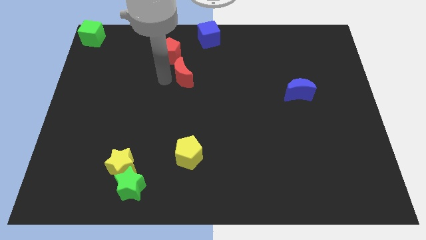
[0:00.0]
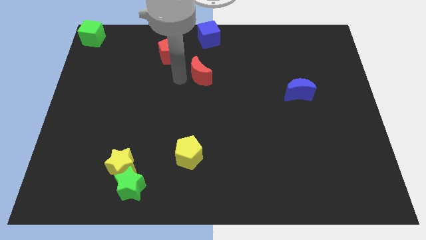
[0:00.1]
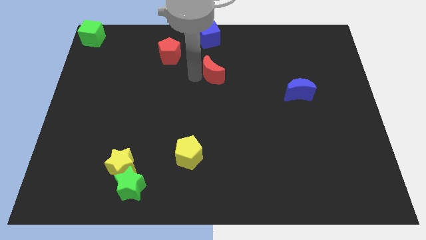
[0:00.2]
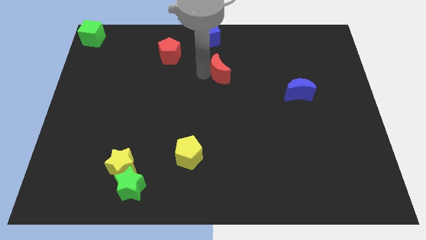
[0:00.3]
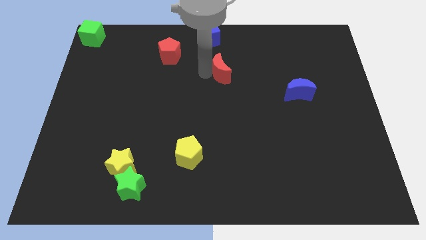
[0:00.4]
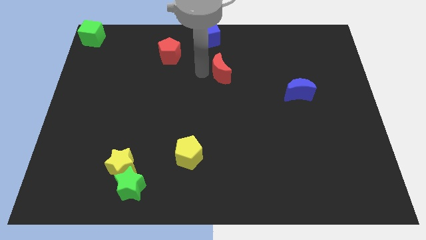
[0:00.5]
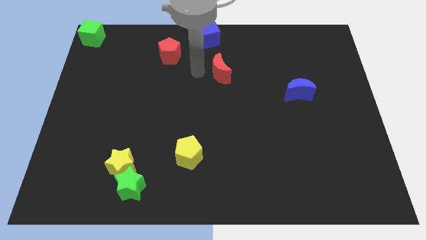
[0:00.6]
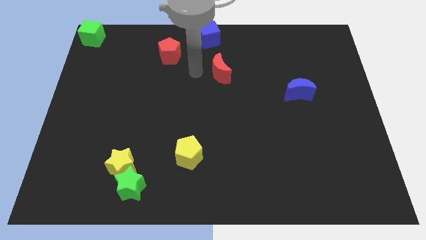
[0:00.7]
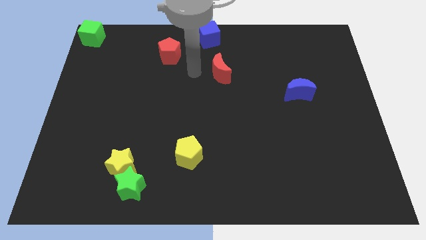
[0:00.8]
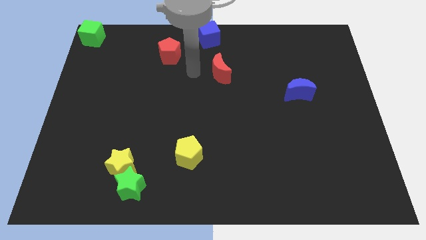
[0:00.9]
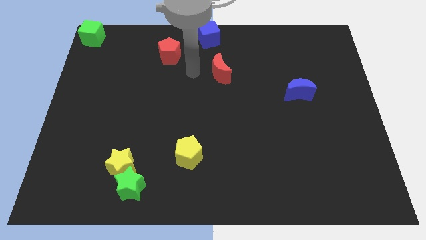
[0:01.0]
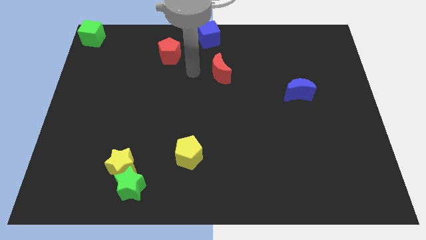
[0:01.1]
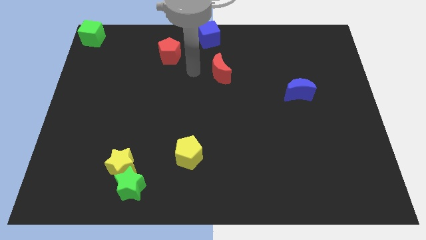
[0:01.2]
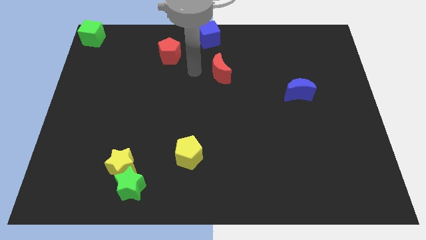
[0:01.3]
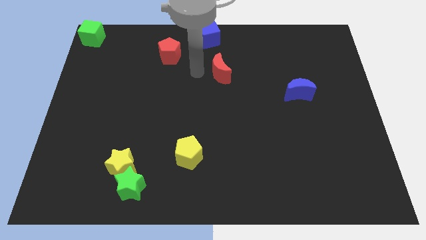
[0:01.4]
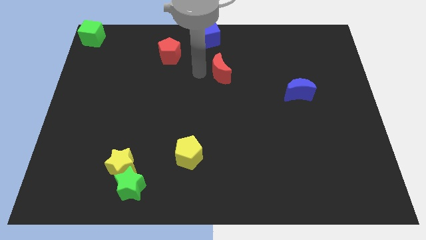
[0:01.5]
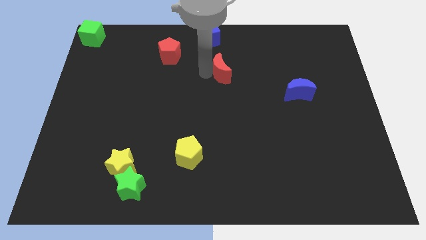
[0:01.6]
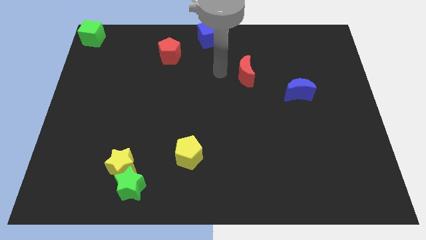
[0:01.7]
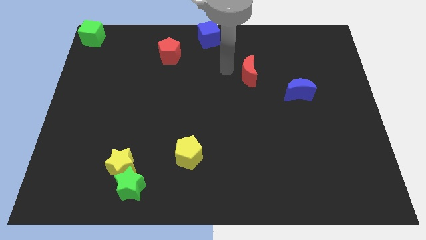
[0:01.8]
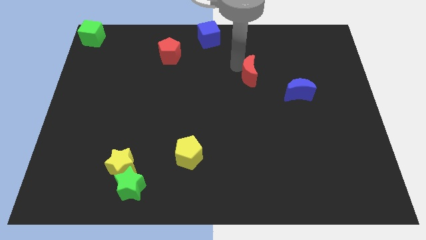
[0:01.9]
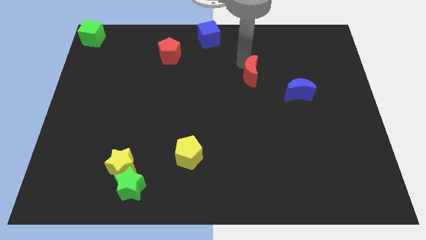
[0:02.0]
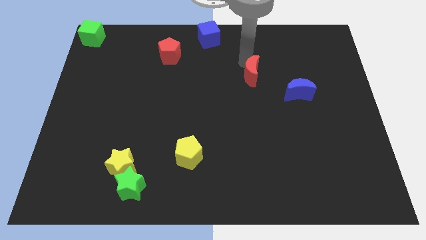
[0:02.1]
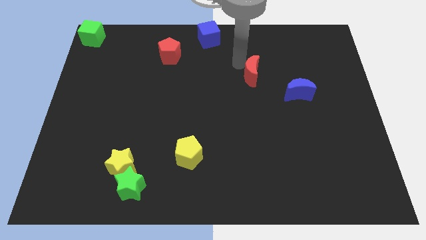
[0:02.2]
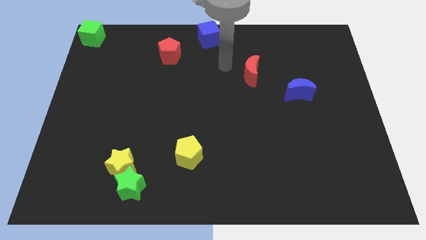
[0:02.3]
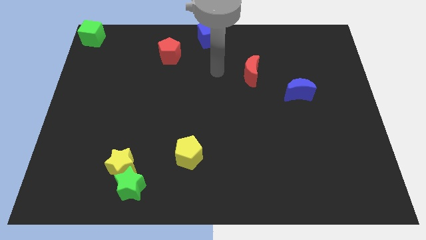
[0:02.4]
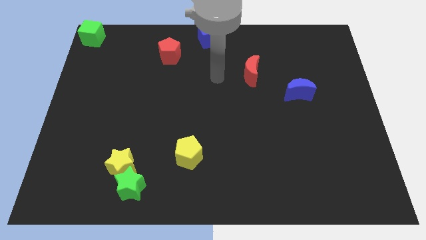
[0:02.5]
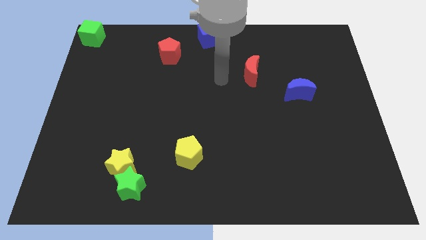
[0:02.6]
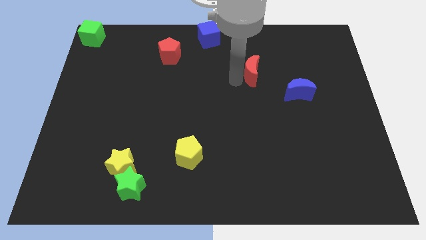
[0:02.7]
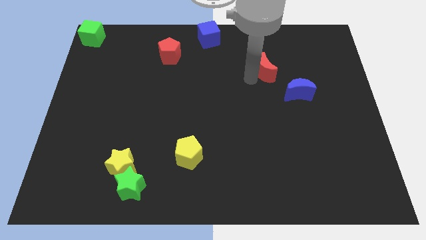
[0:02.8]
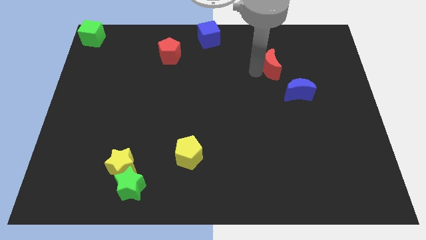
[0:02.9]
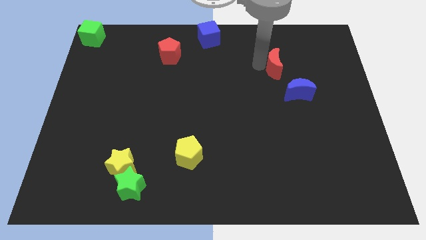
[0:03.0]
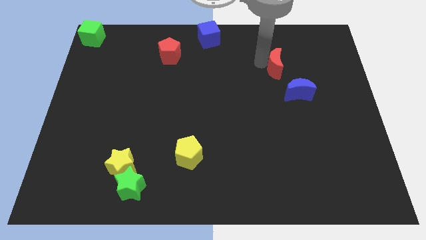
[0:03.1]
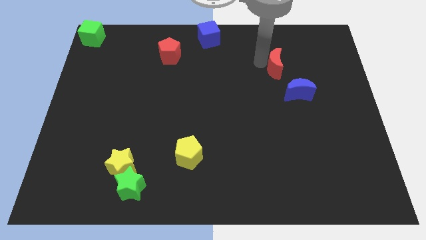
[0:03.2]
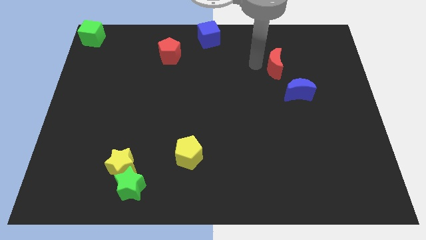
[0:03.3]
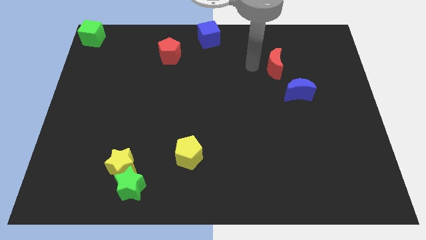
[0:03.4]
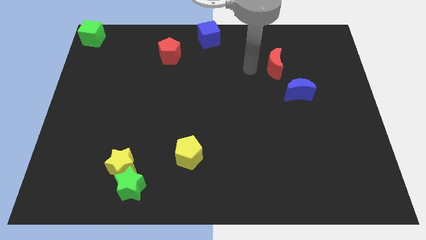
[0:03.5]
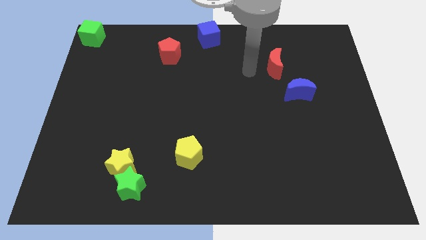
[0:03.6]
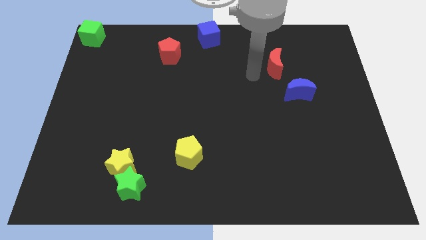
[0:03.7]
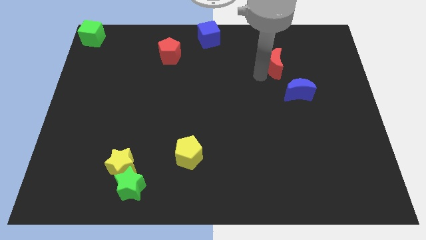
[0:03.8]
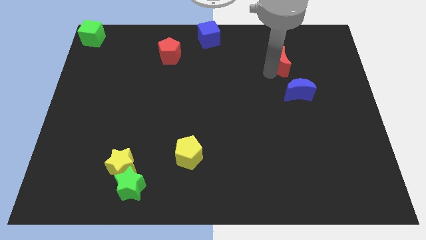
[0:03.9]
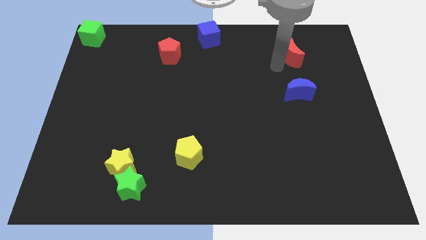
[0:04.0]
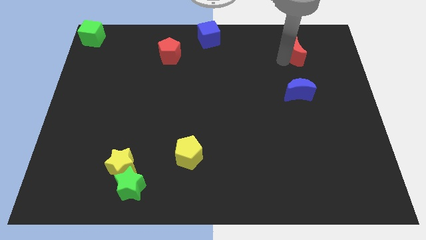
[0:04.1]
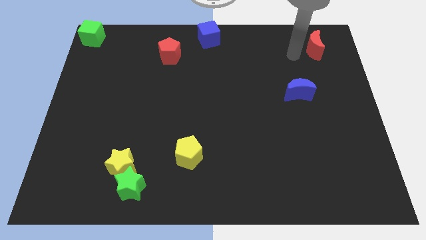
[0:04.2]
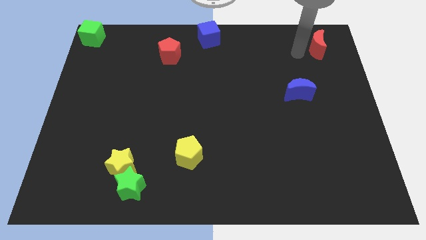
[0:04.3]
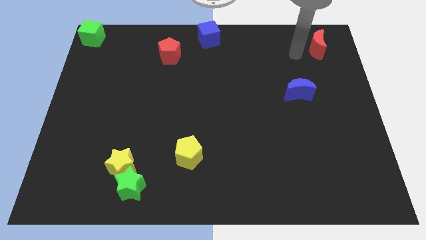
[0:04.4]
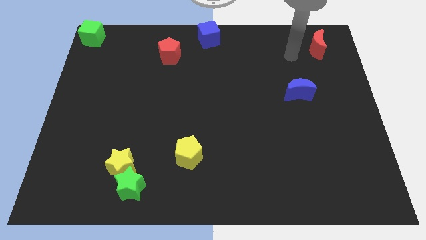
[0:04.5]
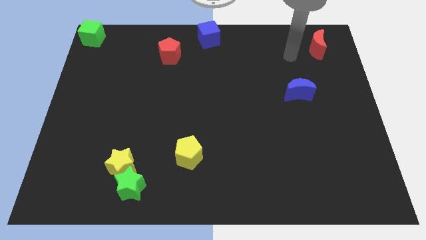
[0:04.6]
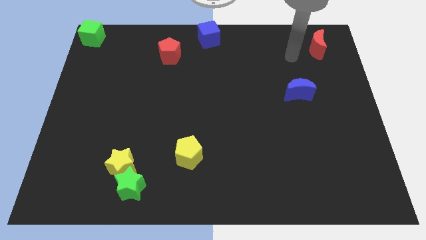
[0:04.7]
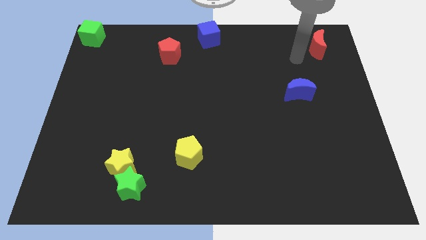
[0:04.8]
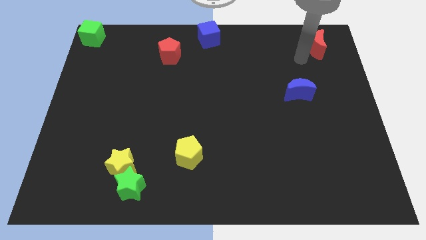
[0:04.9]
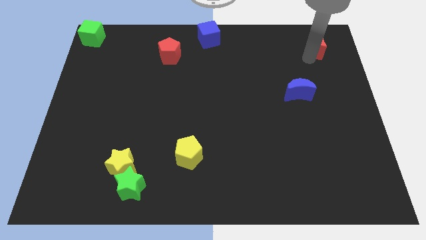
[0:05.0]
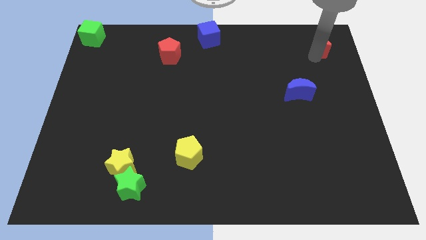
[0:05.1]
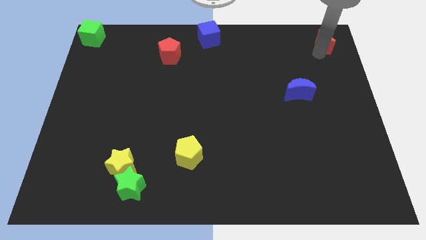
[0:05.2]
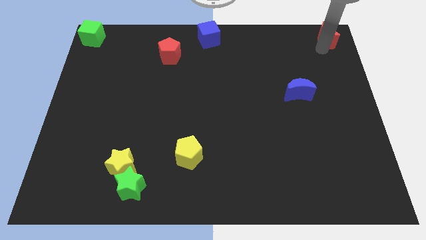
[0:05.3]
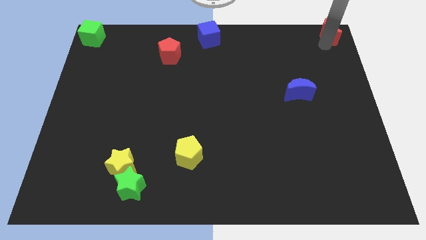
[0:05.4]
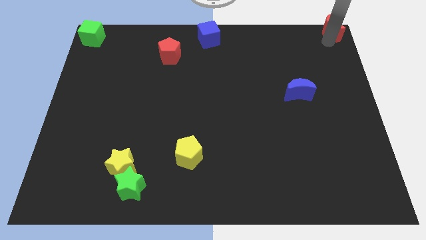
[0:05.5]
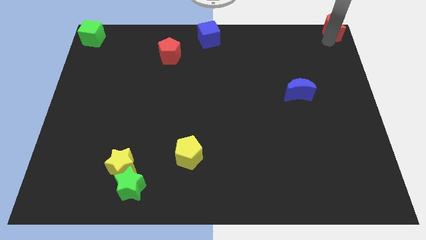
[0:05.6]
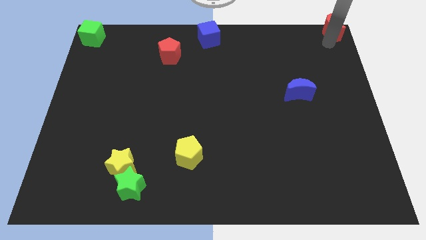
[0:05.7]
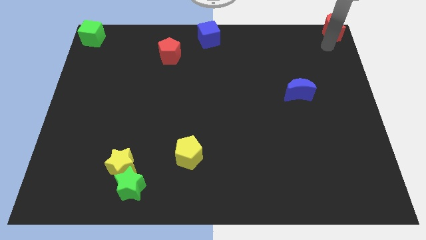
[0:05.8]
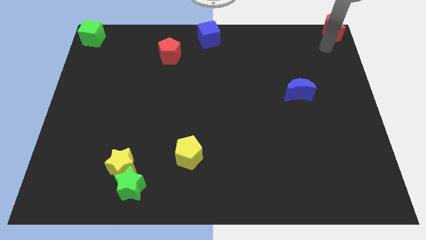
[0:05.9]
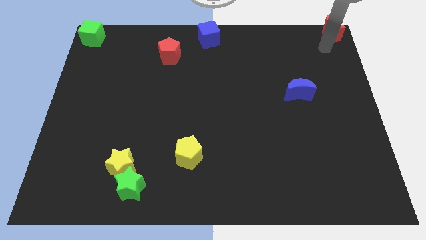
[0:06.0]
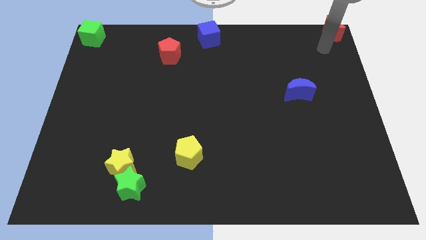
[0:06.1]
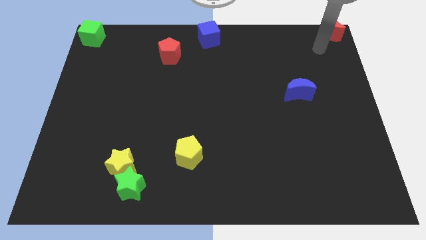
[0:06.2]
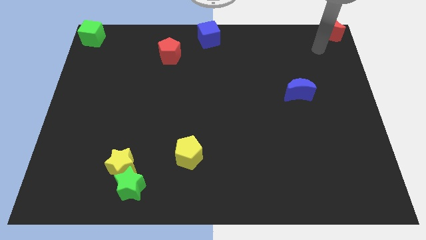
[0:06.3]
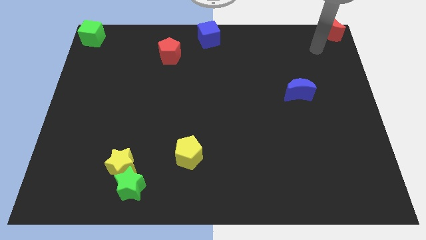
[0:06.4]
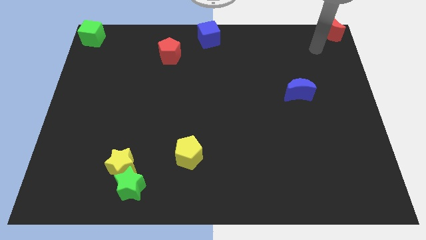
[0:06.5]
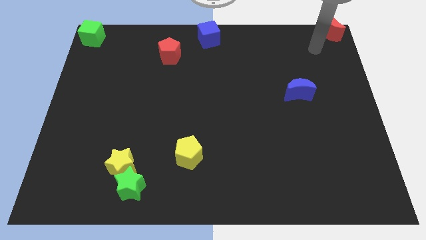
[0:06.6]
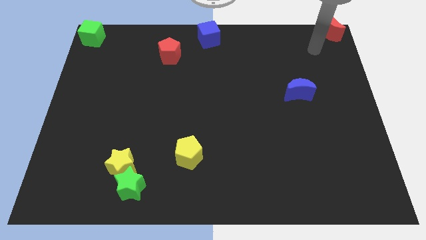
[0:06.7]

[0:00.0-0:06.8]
move red moon to the top right corner of the board

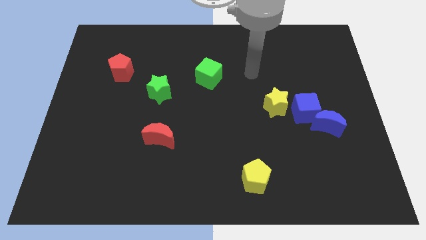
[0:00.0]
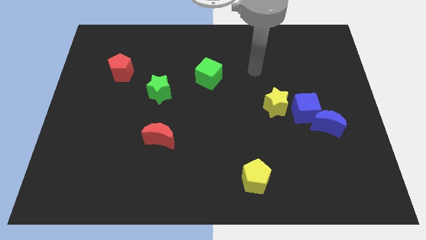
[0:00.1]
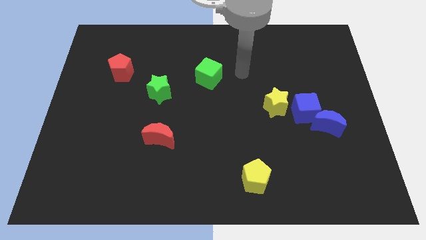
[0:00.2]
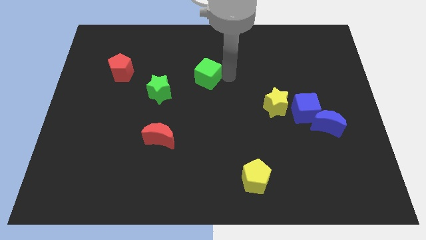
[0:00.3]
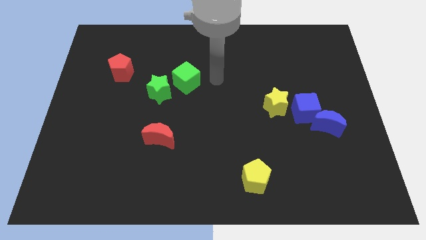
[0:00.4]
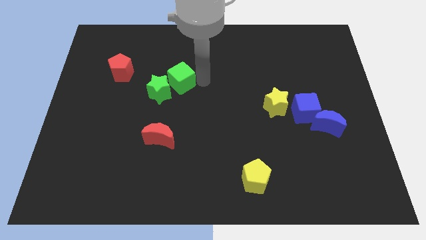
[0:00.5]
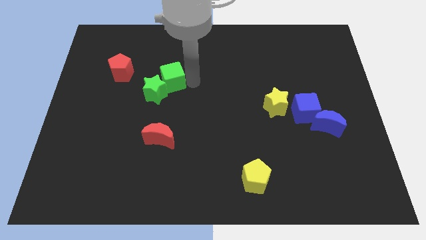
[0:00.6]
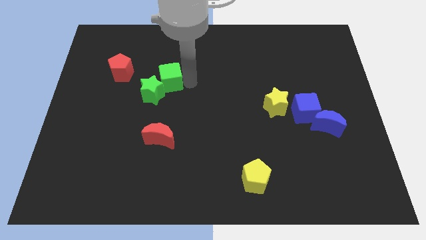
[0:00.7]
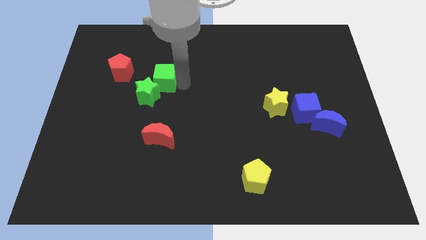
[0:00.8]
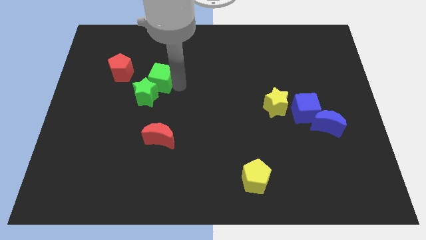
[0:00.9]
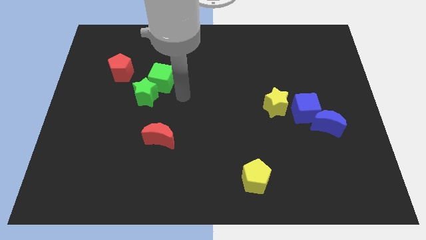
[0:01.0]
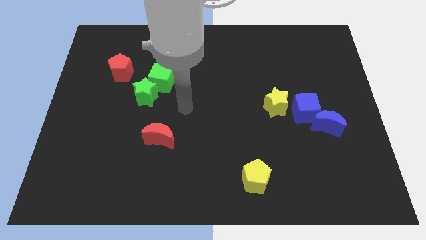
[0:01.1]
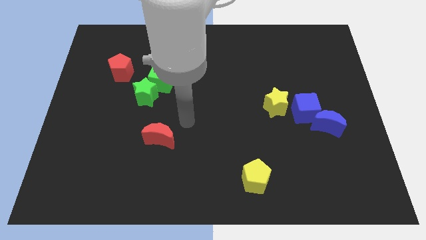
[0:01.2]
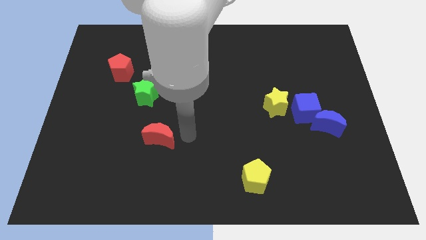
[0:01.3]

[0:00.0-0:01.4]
move the arm away from the green cube

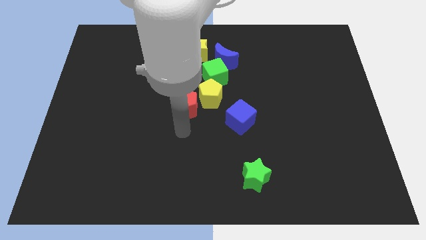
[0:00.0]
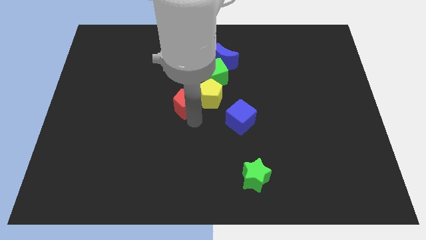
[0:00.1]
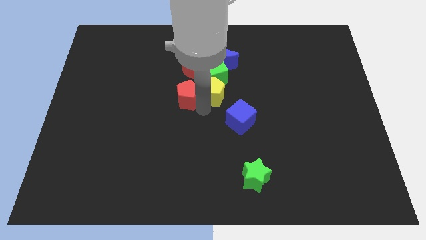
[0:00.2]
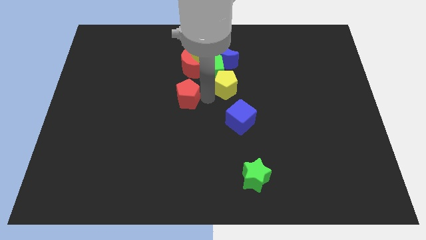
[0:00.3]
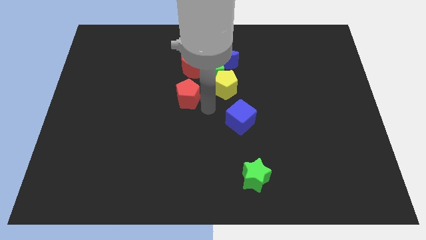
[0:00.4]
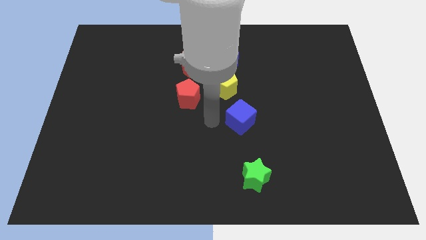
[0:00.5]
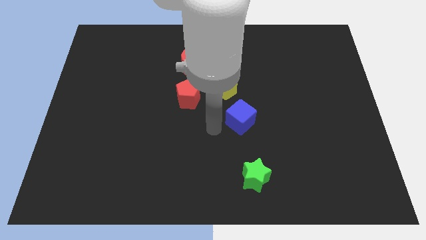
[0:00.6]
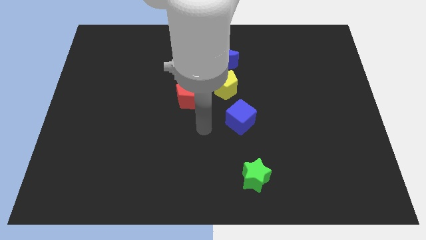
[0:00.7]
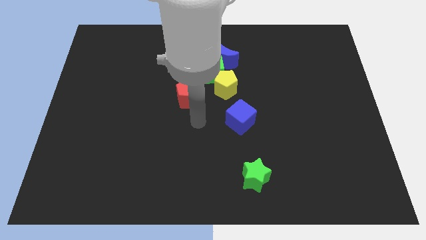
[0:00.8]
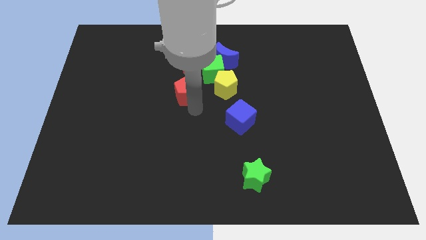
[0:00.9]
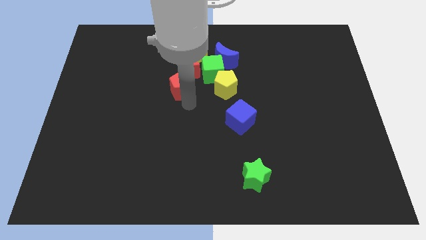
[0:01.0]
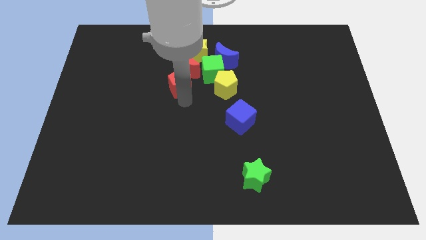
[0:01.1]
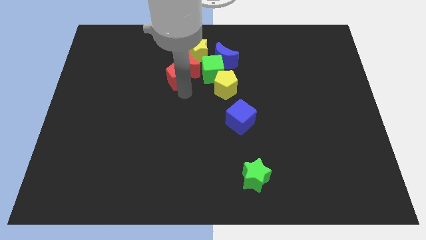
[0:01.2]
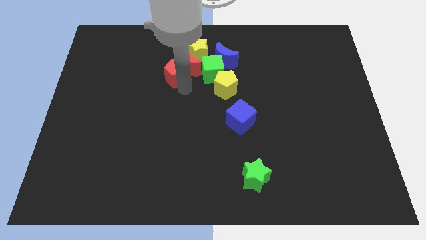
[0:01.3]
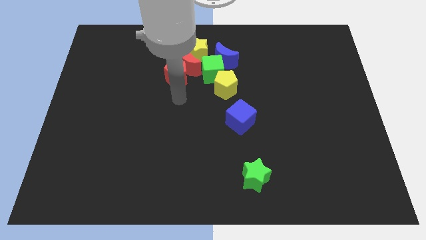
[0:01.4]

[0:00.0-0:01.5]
push the red pentagon close to the red moon
